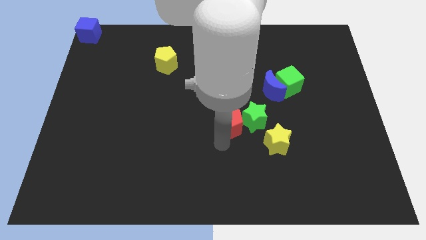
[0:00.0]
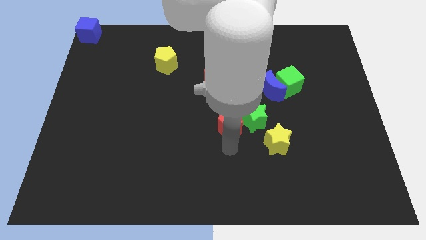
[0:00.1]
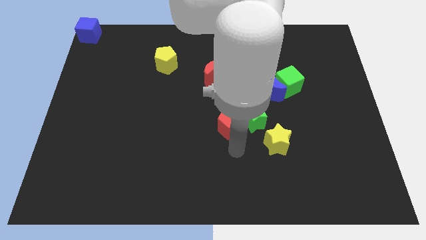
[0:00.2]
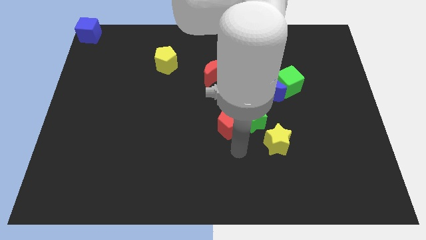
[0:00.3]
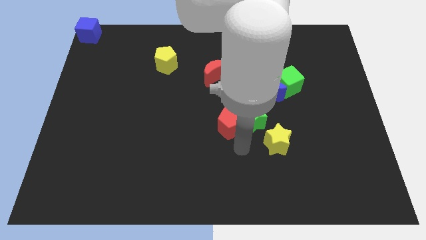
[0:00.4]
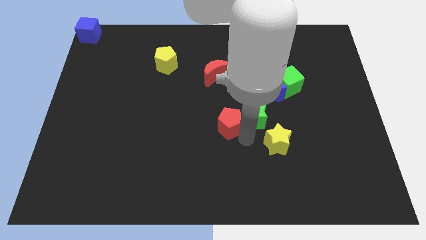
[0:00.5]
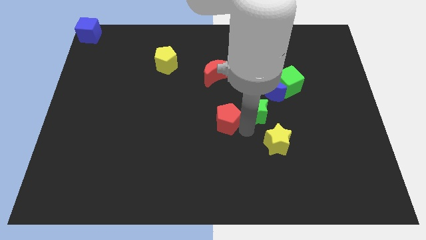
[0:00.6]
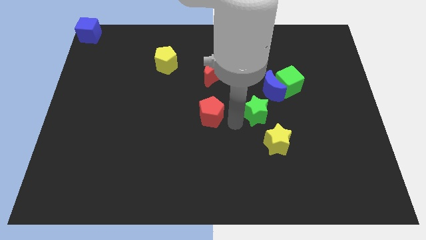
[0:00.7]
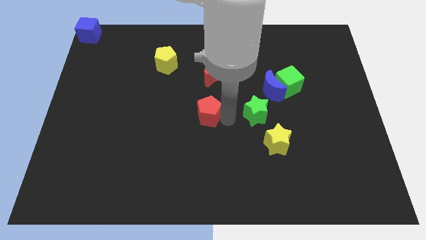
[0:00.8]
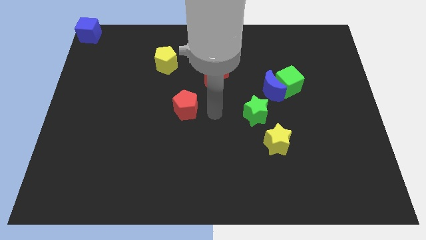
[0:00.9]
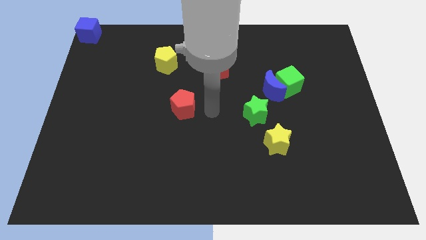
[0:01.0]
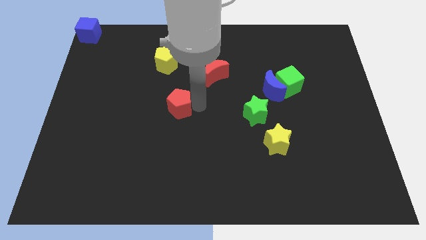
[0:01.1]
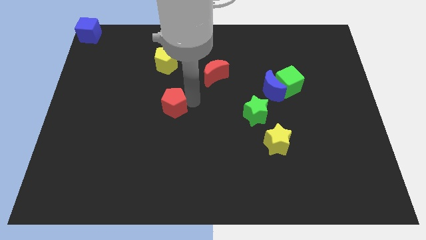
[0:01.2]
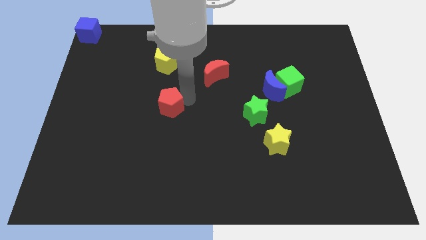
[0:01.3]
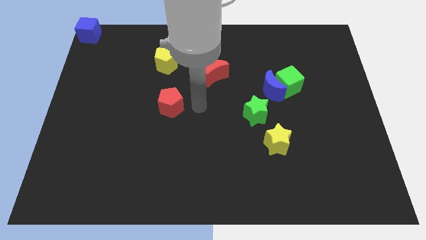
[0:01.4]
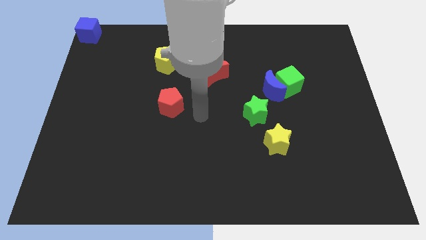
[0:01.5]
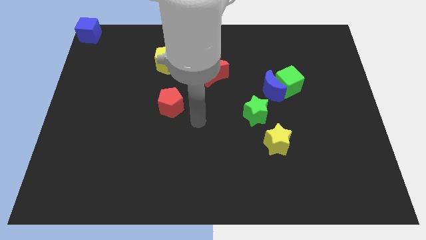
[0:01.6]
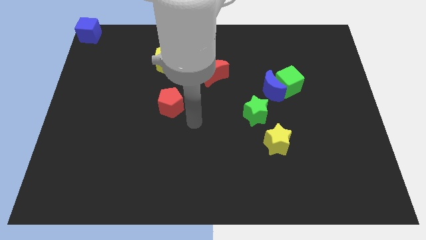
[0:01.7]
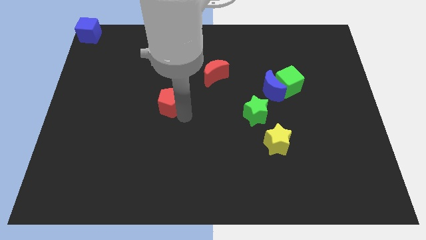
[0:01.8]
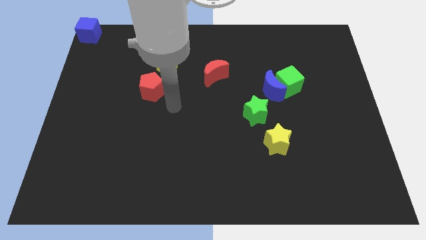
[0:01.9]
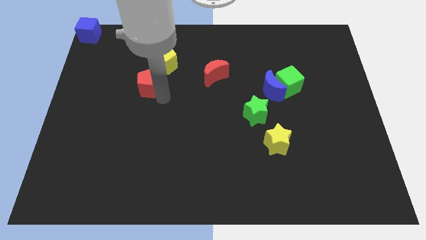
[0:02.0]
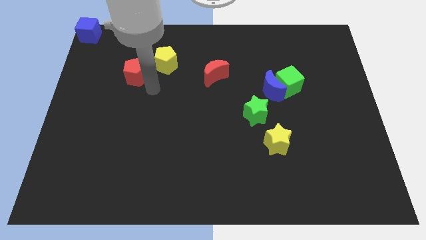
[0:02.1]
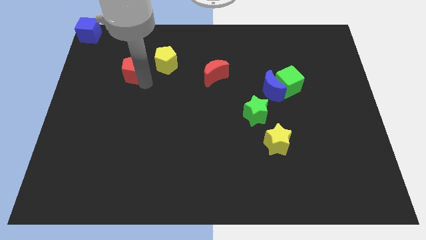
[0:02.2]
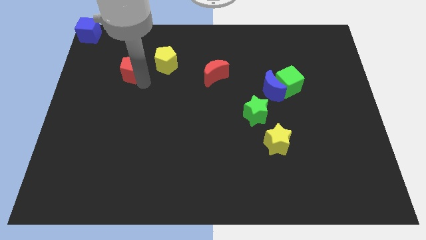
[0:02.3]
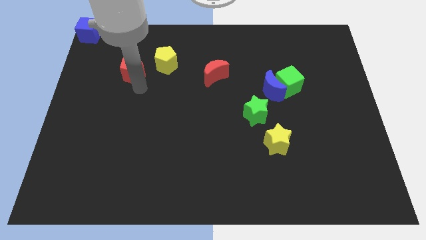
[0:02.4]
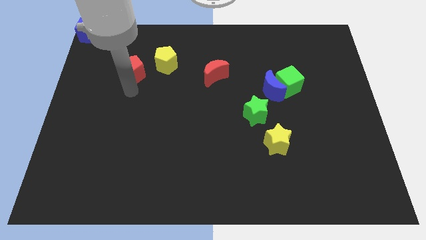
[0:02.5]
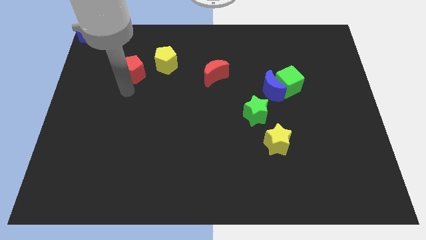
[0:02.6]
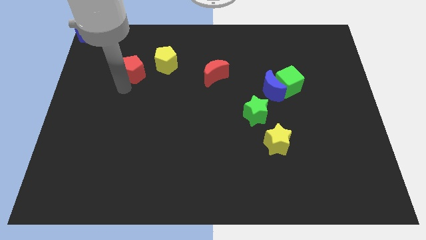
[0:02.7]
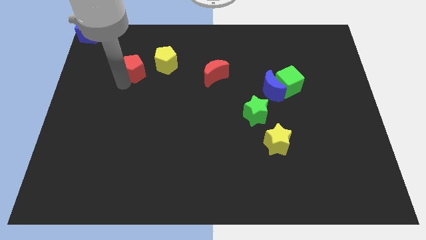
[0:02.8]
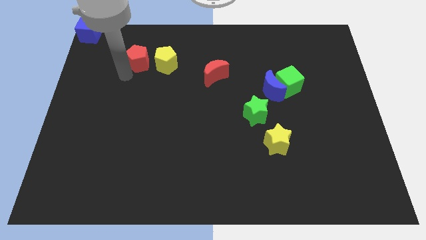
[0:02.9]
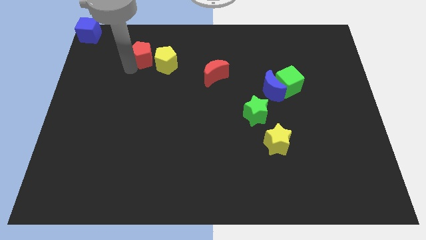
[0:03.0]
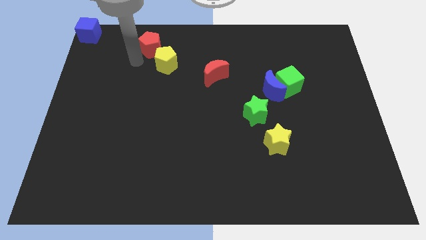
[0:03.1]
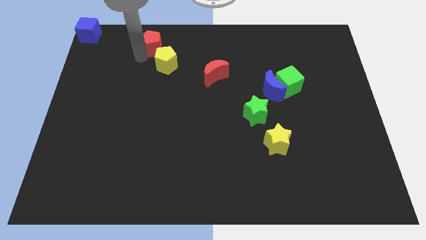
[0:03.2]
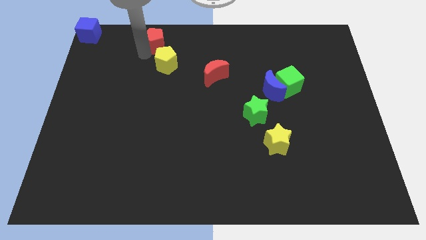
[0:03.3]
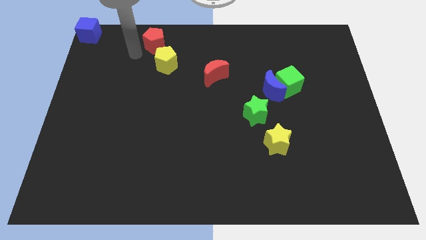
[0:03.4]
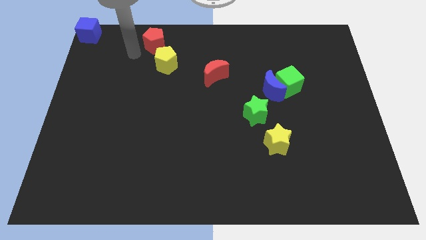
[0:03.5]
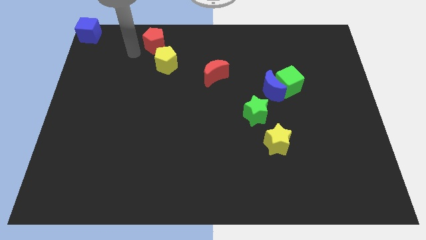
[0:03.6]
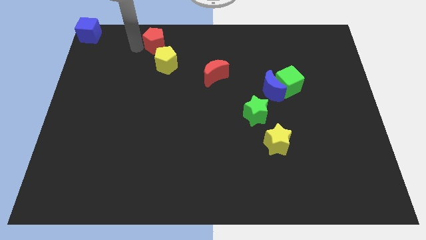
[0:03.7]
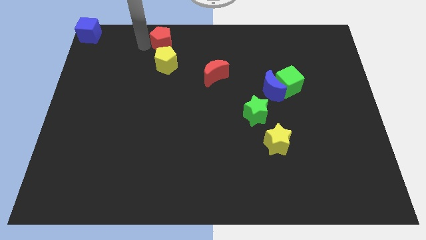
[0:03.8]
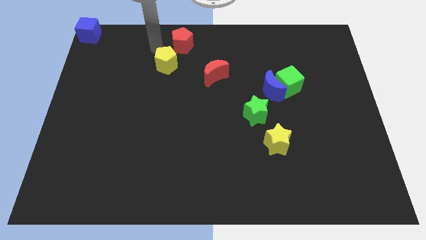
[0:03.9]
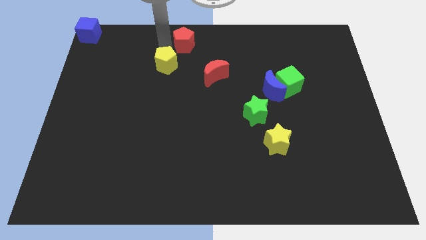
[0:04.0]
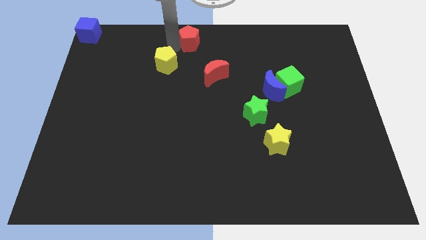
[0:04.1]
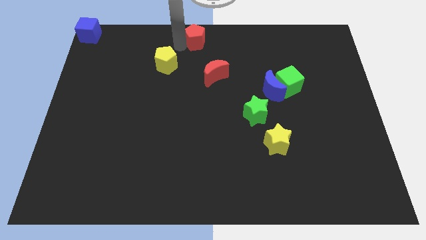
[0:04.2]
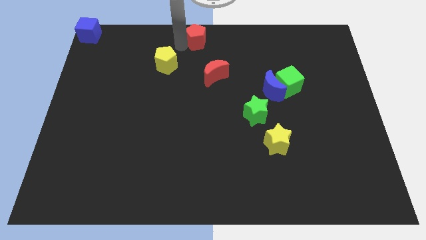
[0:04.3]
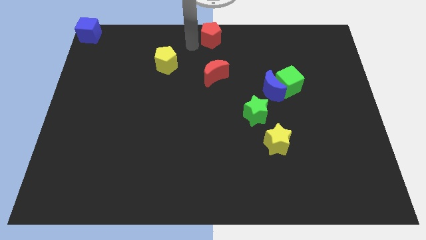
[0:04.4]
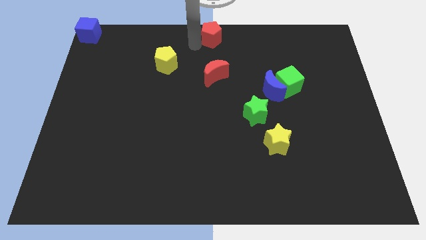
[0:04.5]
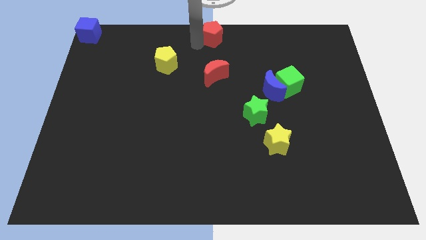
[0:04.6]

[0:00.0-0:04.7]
push the red pentagon towards top center of the board

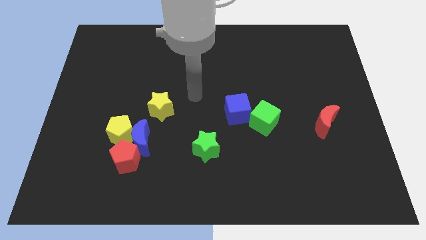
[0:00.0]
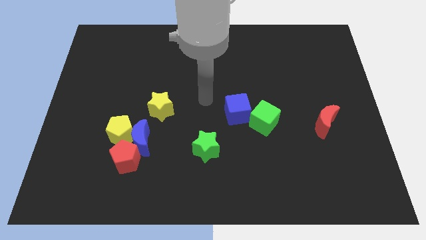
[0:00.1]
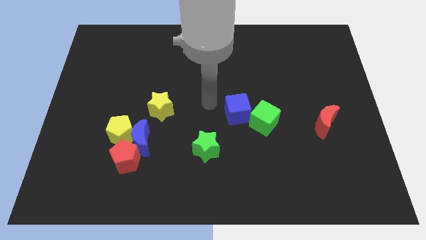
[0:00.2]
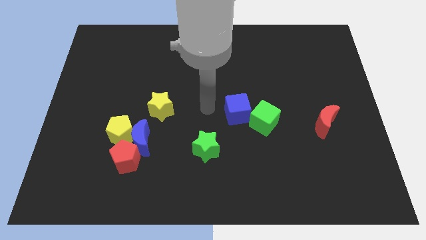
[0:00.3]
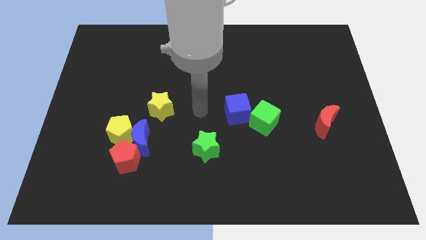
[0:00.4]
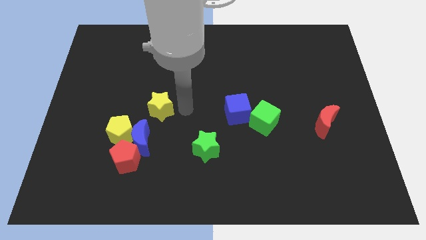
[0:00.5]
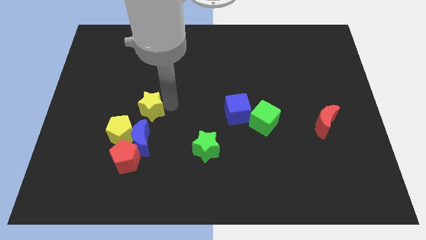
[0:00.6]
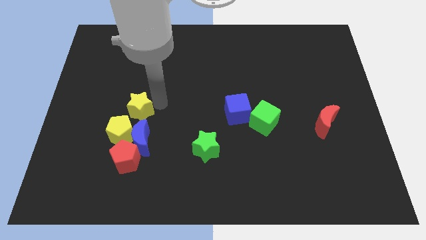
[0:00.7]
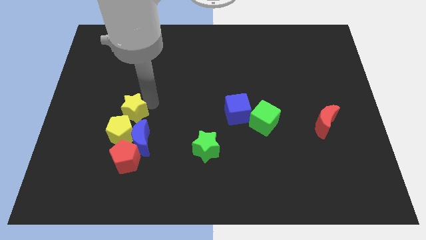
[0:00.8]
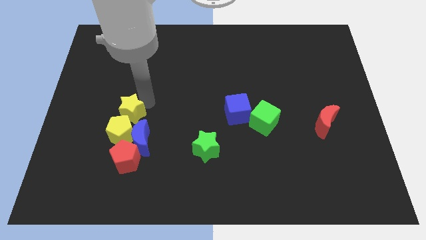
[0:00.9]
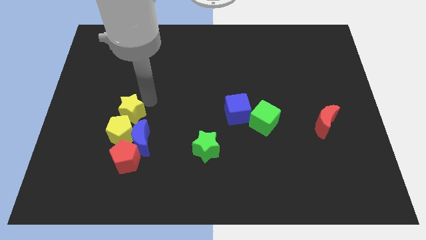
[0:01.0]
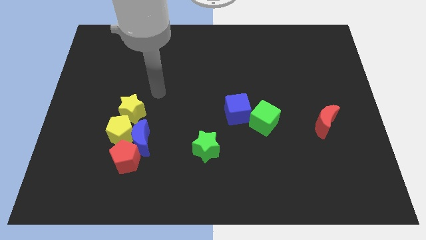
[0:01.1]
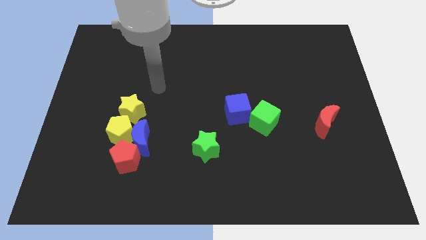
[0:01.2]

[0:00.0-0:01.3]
place yellow star close to the yellow pentagon

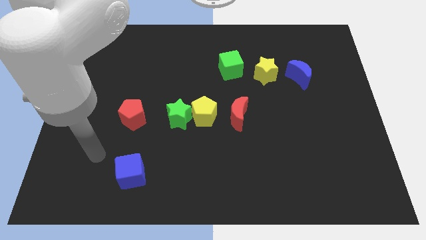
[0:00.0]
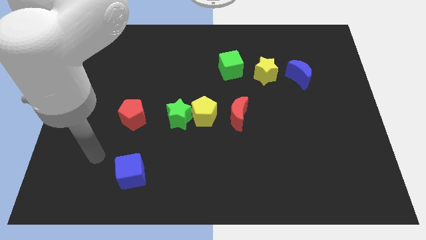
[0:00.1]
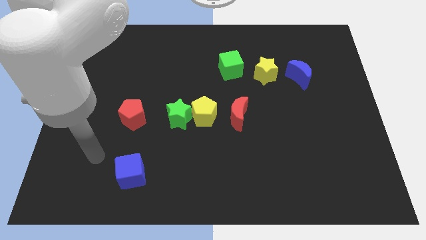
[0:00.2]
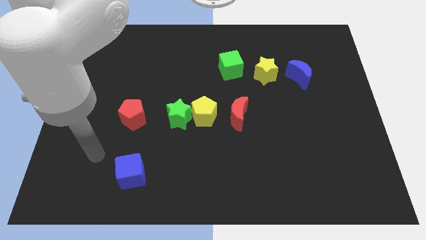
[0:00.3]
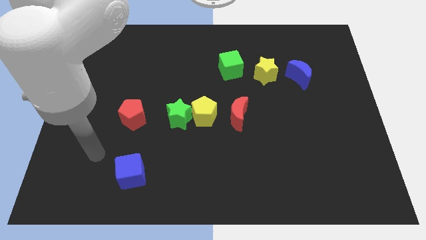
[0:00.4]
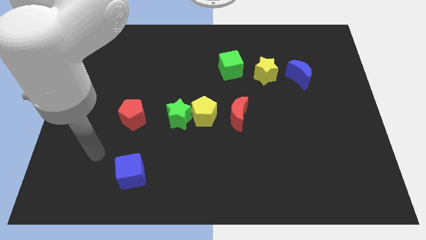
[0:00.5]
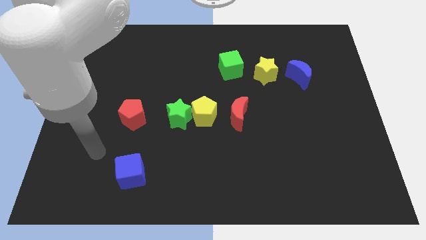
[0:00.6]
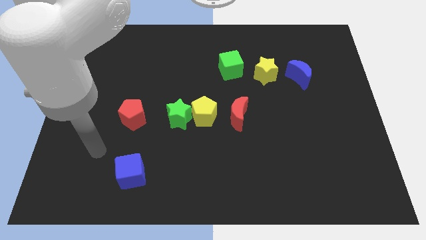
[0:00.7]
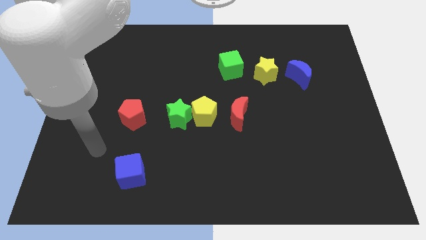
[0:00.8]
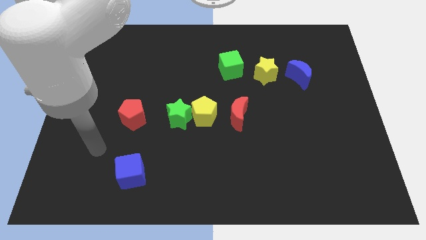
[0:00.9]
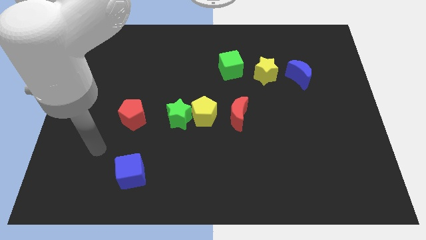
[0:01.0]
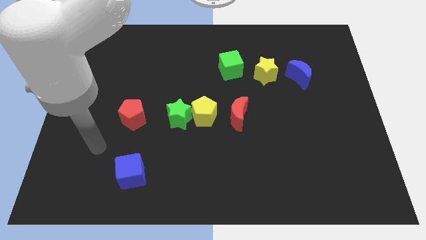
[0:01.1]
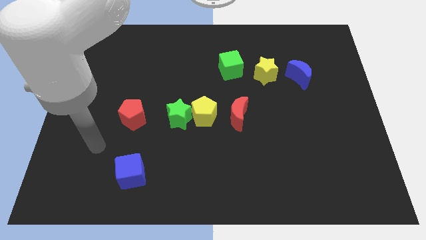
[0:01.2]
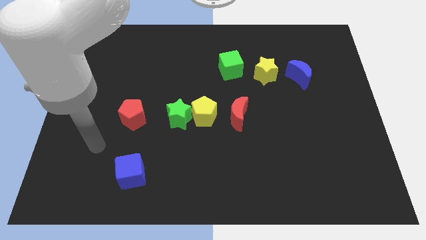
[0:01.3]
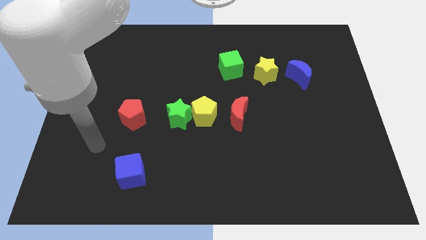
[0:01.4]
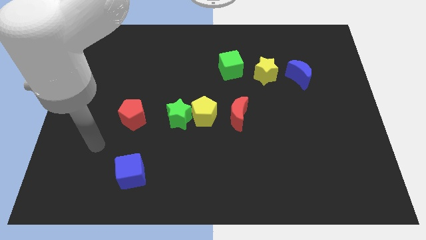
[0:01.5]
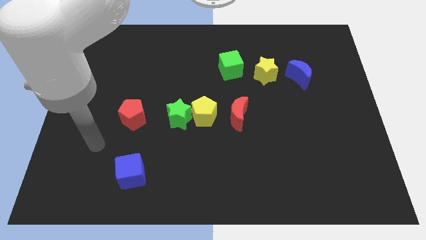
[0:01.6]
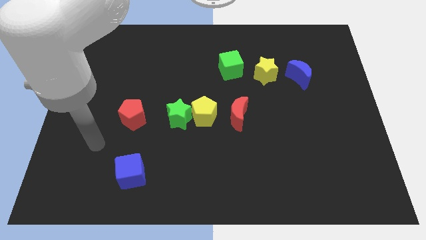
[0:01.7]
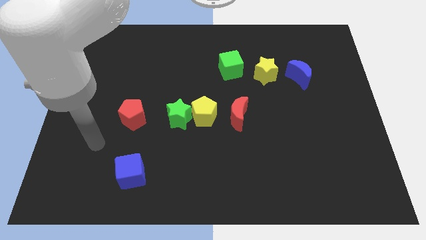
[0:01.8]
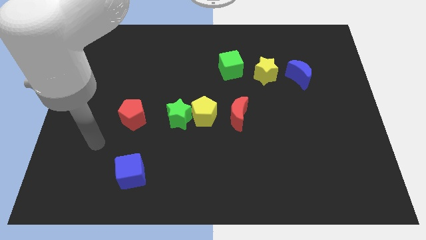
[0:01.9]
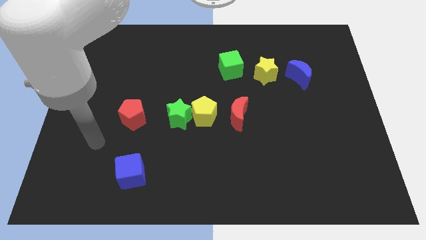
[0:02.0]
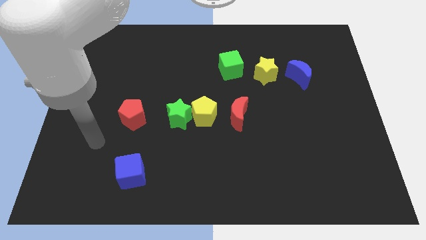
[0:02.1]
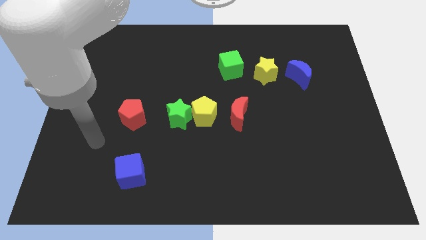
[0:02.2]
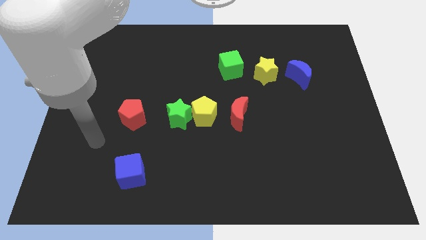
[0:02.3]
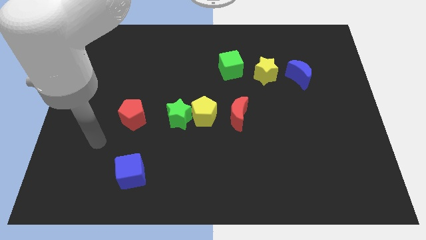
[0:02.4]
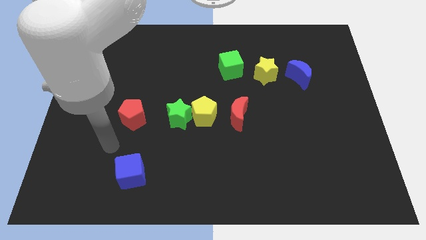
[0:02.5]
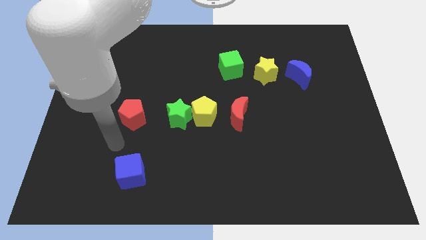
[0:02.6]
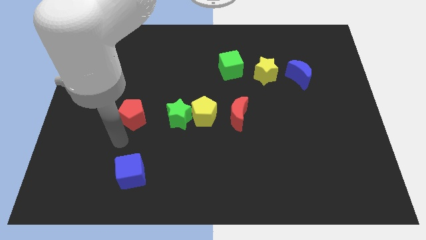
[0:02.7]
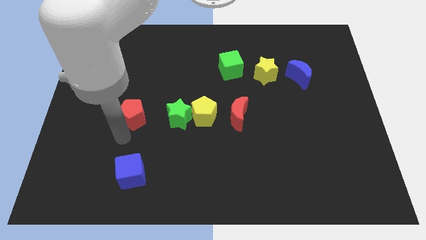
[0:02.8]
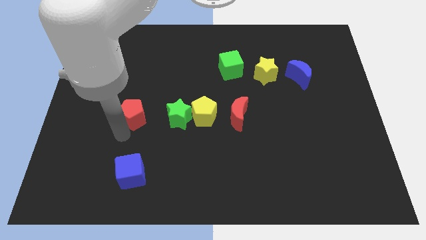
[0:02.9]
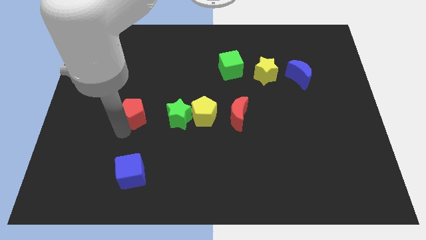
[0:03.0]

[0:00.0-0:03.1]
push the red pentagon slightly up
